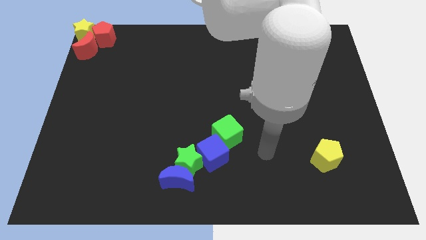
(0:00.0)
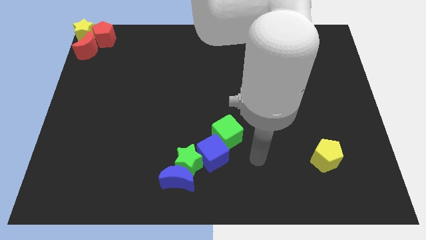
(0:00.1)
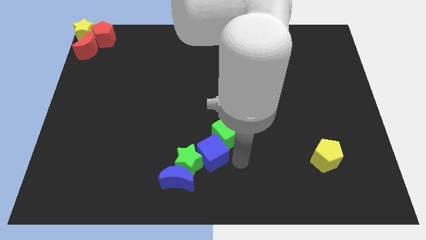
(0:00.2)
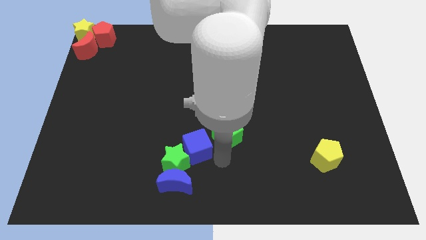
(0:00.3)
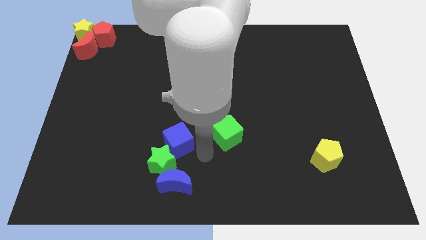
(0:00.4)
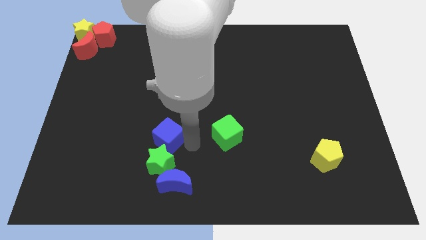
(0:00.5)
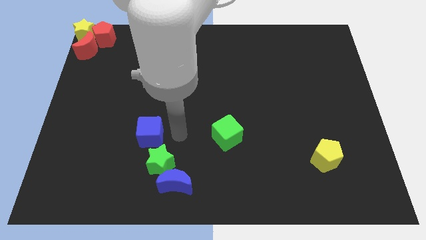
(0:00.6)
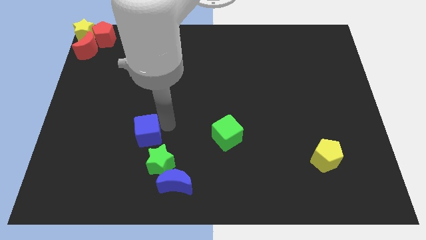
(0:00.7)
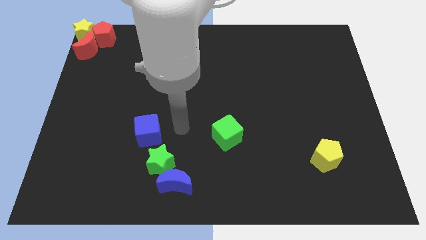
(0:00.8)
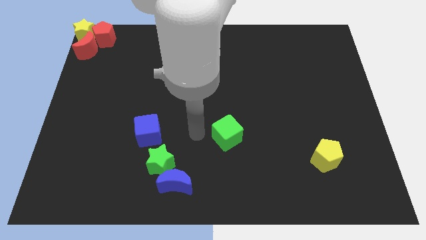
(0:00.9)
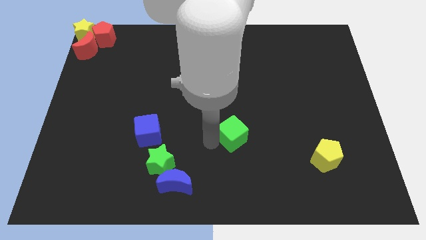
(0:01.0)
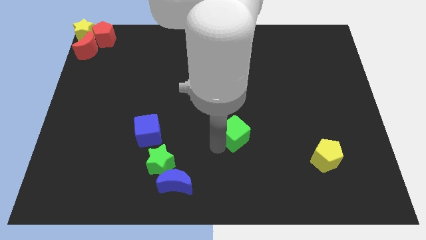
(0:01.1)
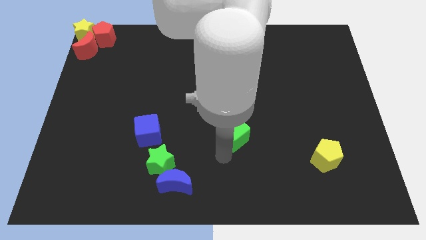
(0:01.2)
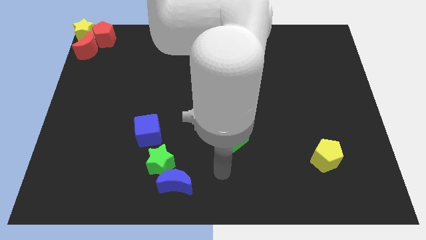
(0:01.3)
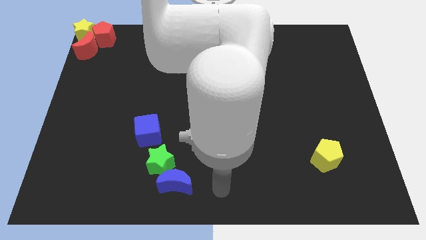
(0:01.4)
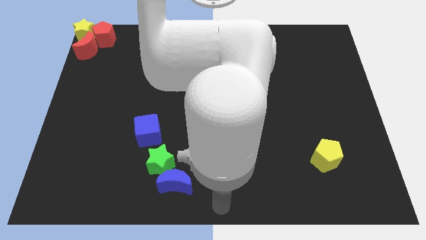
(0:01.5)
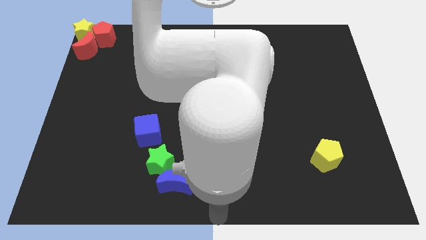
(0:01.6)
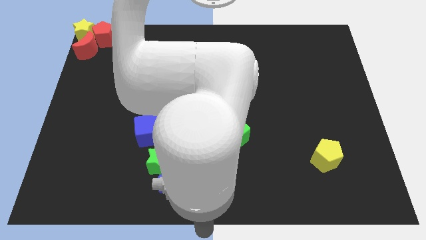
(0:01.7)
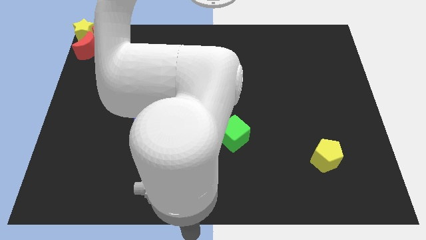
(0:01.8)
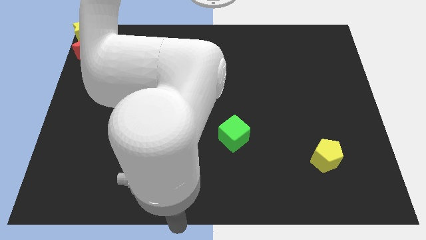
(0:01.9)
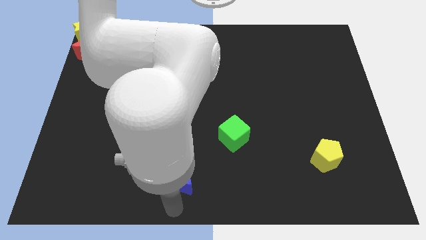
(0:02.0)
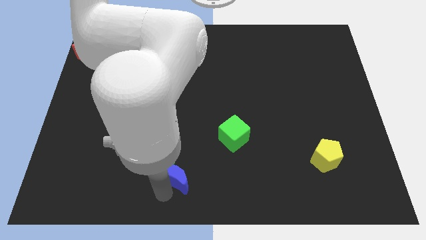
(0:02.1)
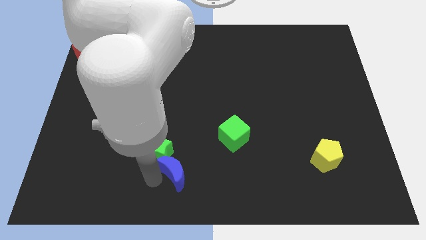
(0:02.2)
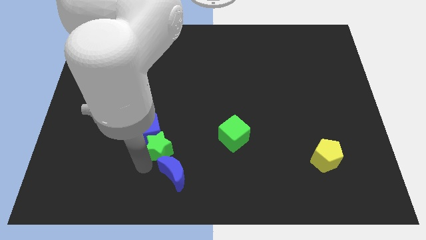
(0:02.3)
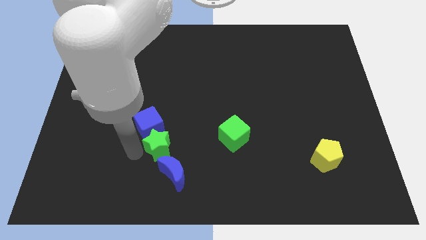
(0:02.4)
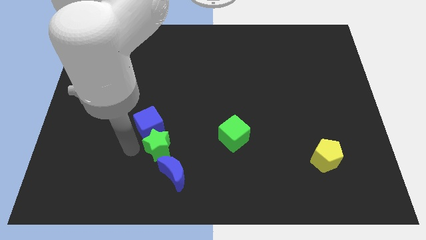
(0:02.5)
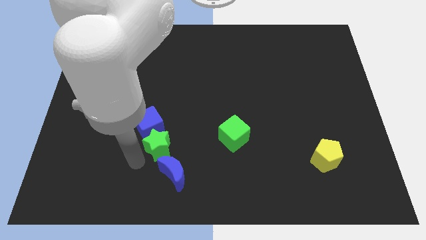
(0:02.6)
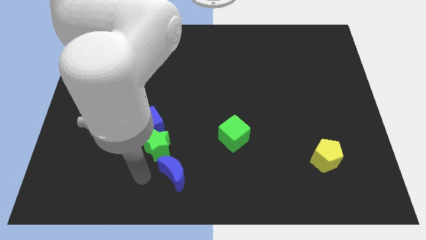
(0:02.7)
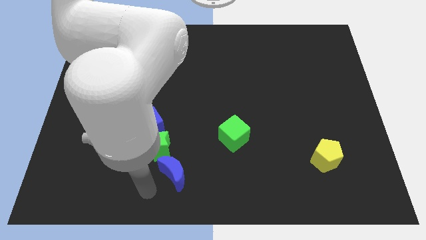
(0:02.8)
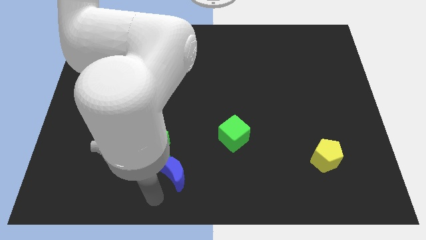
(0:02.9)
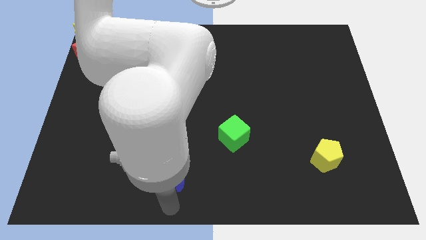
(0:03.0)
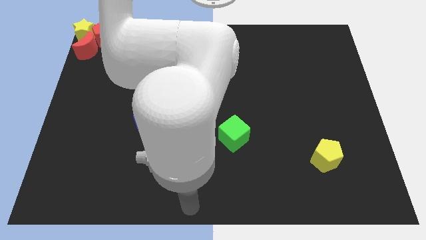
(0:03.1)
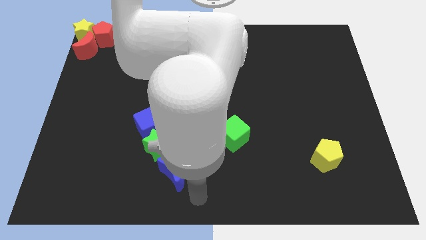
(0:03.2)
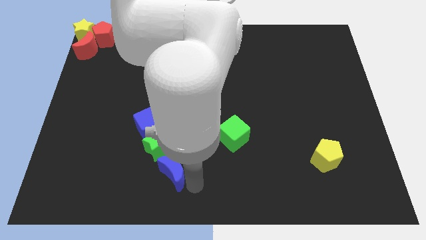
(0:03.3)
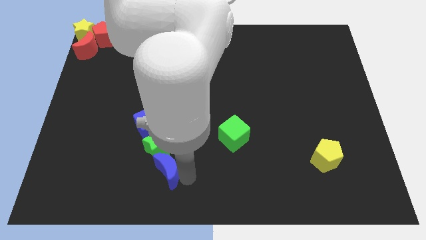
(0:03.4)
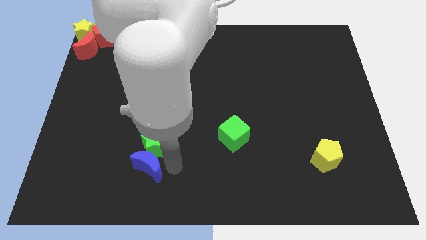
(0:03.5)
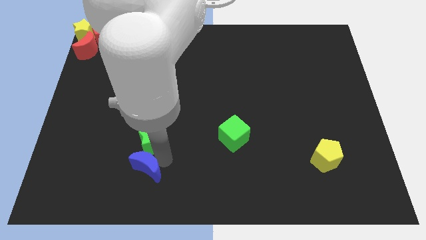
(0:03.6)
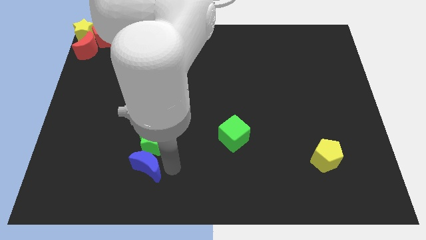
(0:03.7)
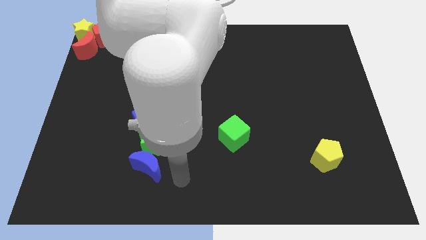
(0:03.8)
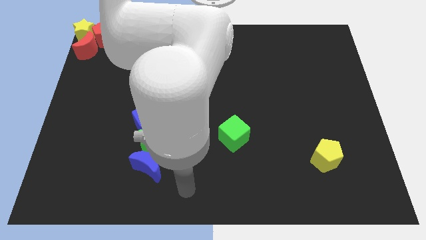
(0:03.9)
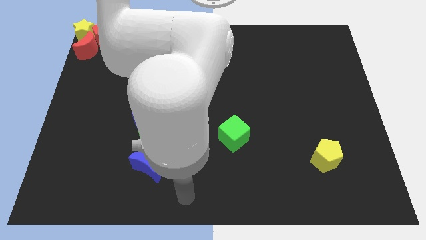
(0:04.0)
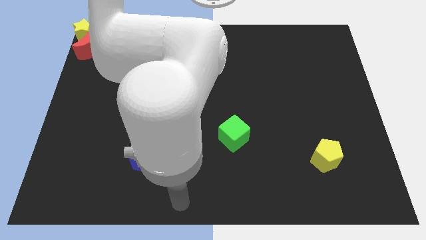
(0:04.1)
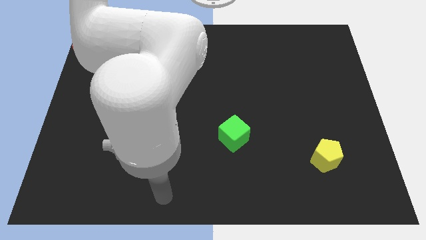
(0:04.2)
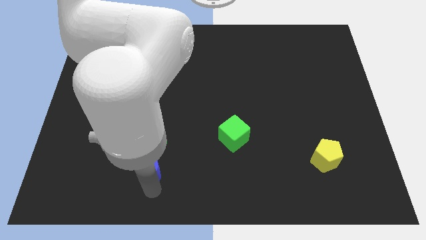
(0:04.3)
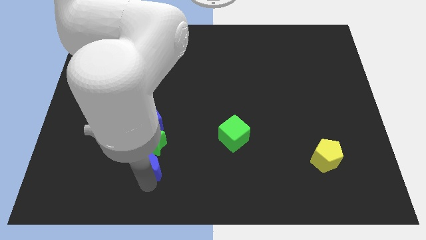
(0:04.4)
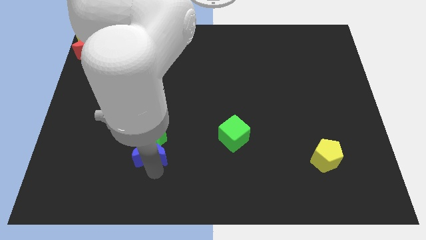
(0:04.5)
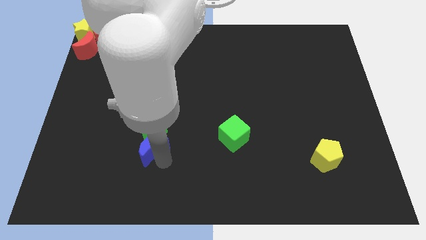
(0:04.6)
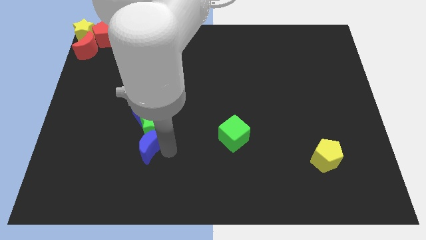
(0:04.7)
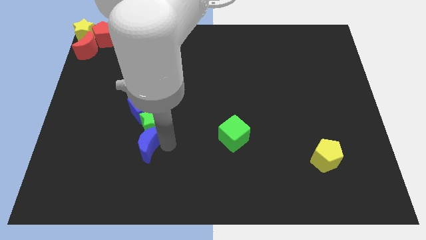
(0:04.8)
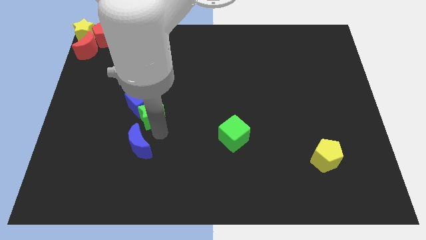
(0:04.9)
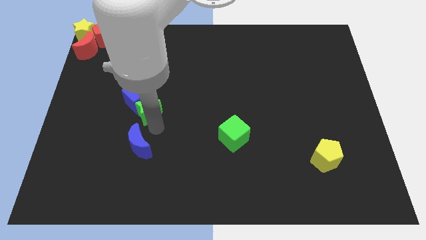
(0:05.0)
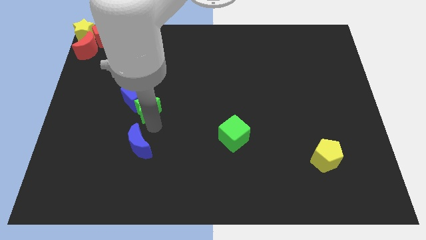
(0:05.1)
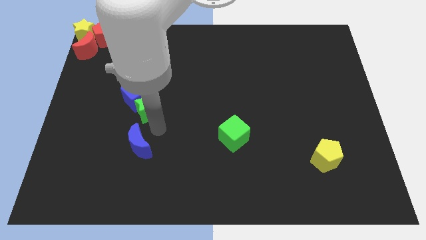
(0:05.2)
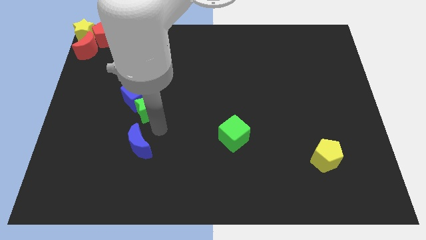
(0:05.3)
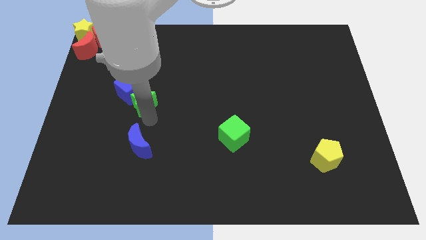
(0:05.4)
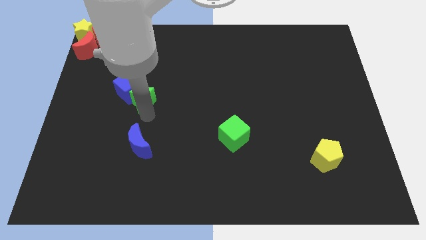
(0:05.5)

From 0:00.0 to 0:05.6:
push a group of blocks towards the top side of the board

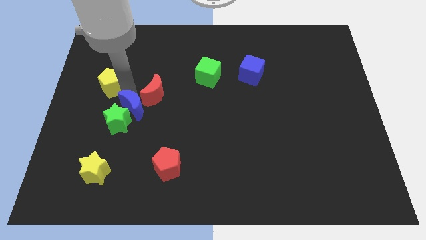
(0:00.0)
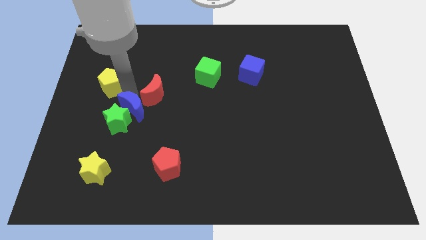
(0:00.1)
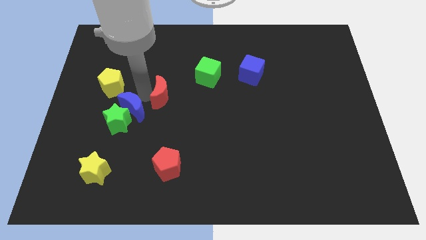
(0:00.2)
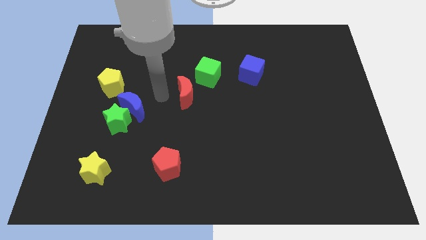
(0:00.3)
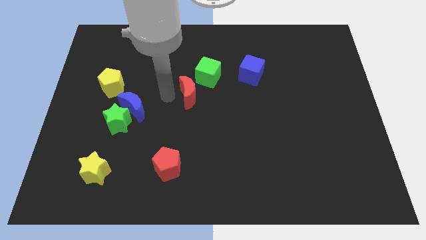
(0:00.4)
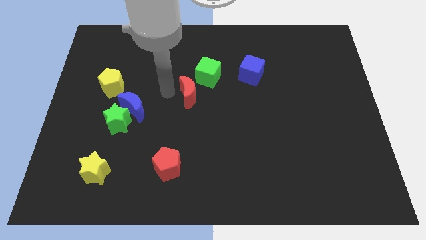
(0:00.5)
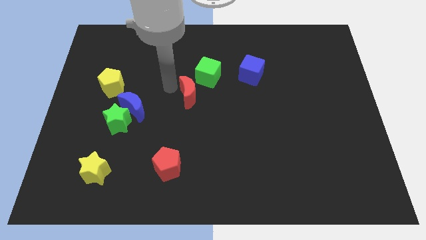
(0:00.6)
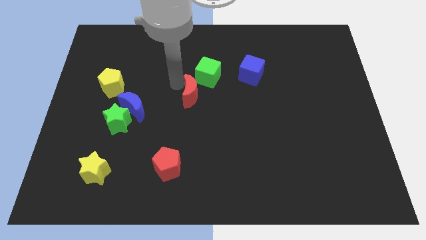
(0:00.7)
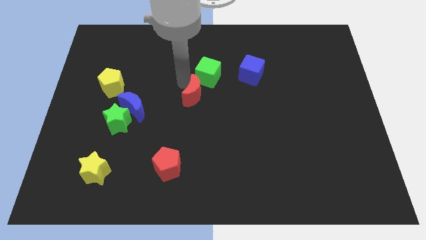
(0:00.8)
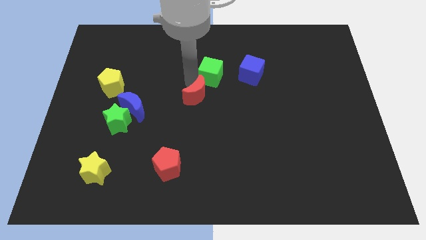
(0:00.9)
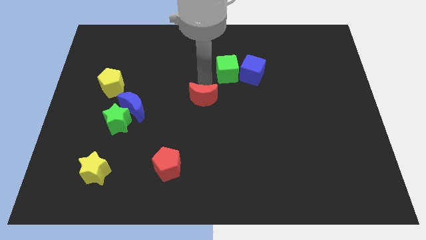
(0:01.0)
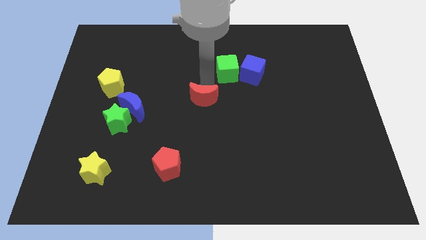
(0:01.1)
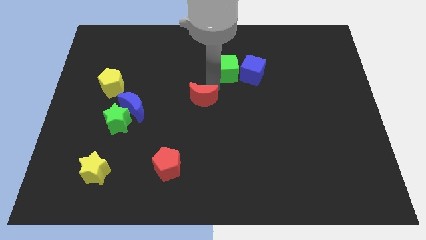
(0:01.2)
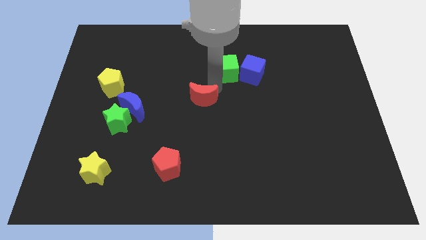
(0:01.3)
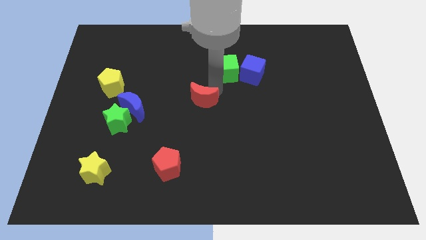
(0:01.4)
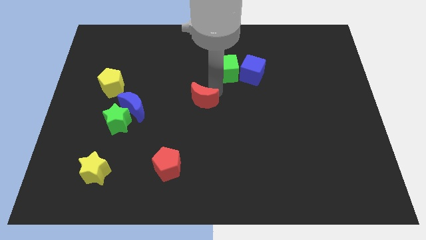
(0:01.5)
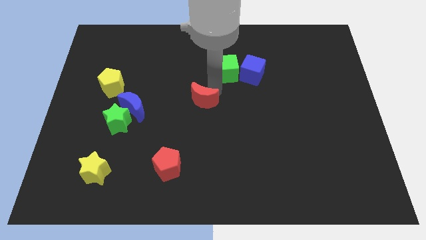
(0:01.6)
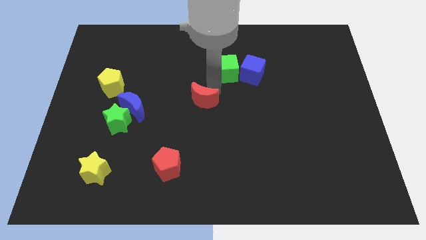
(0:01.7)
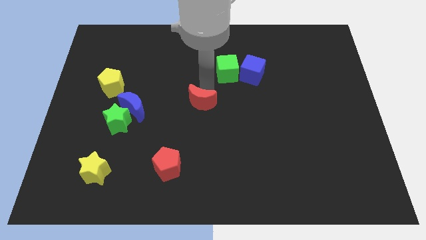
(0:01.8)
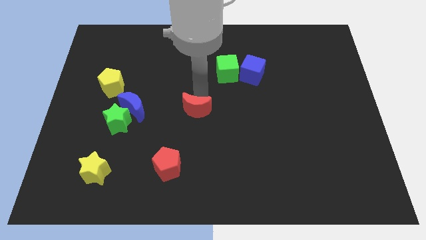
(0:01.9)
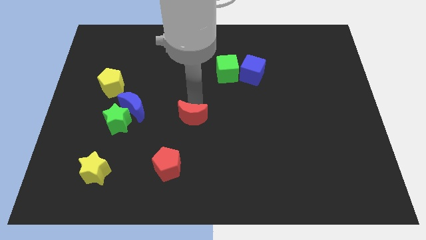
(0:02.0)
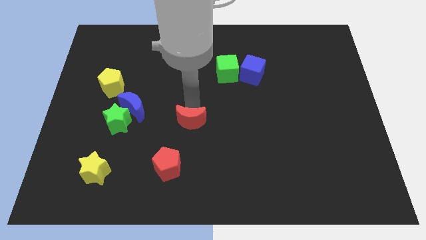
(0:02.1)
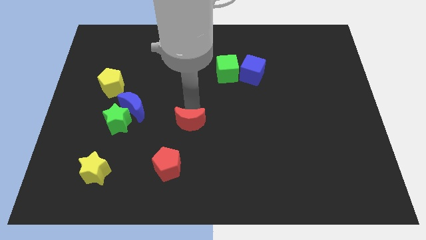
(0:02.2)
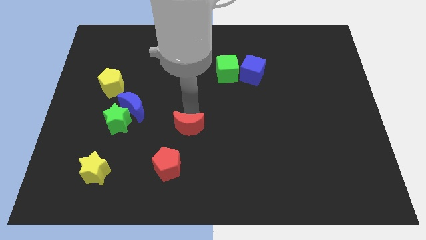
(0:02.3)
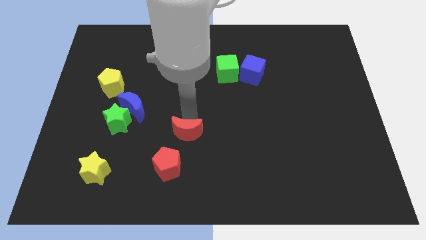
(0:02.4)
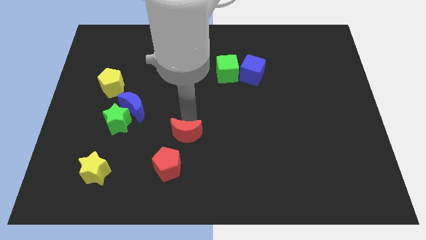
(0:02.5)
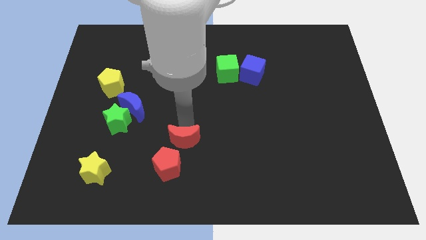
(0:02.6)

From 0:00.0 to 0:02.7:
place the red moon above the red pentagon

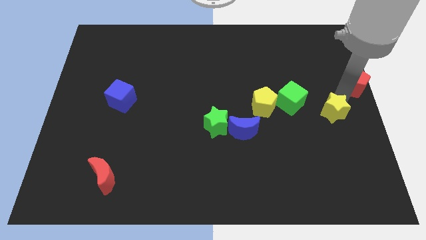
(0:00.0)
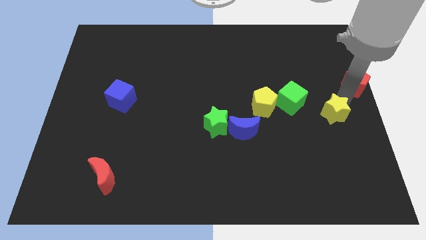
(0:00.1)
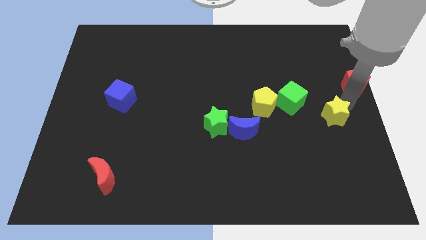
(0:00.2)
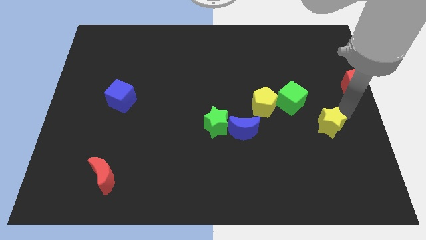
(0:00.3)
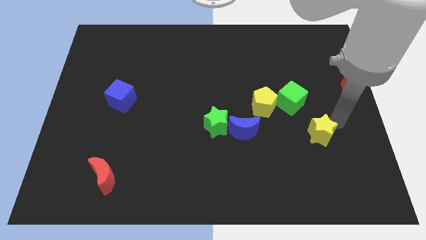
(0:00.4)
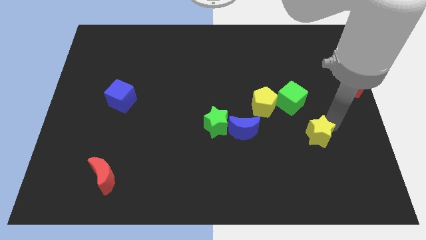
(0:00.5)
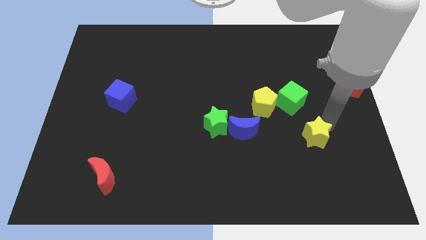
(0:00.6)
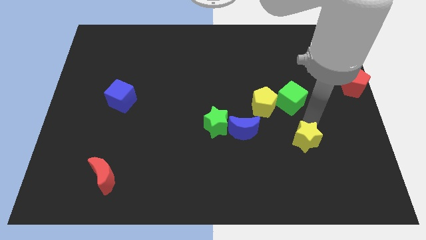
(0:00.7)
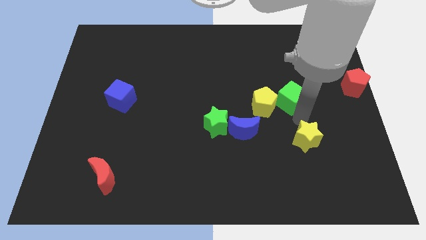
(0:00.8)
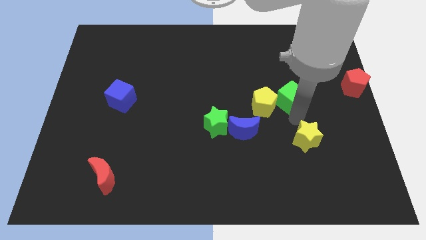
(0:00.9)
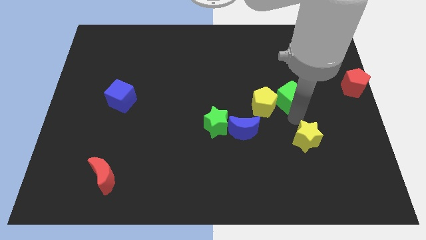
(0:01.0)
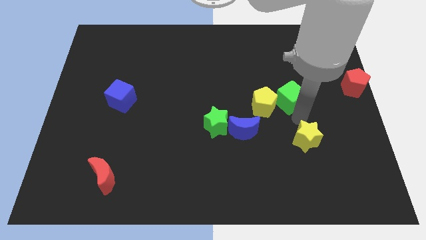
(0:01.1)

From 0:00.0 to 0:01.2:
push the yellow star below the green cube
